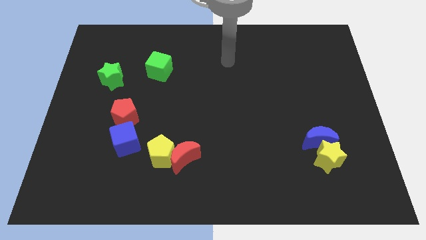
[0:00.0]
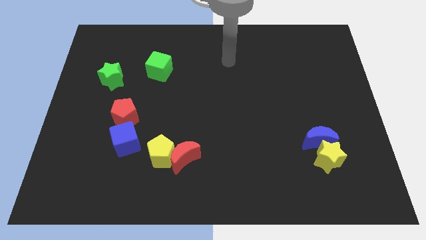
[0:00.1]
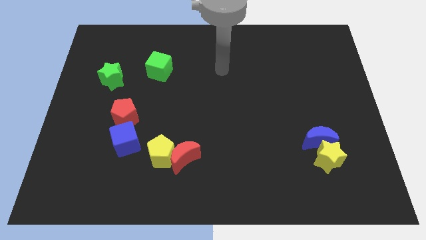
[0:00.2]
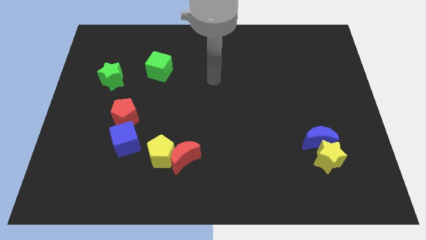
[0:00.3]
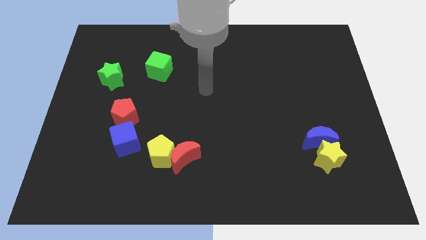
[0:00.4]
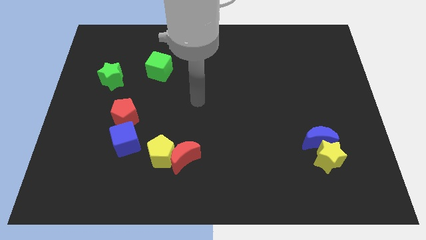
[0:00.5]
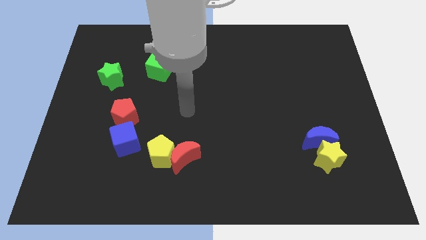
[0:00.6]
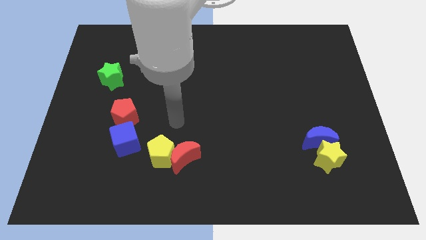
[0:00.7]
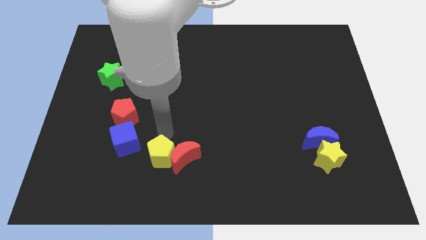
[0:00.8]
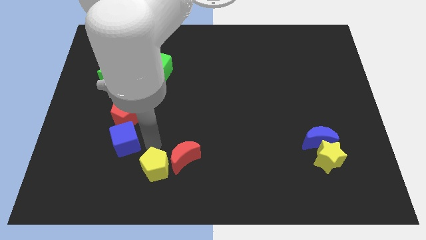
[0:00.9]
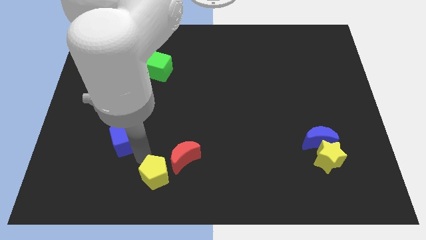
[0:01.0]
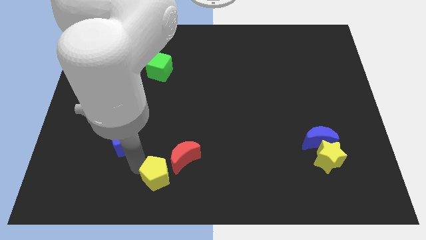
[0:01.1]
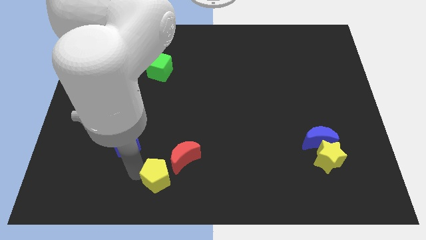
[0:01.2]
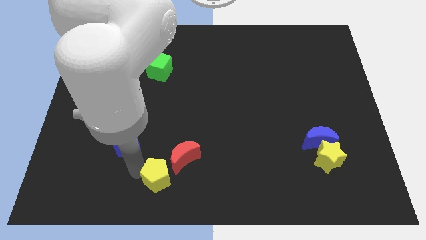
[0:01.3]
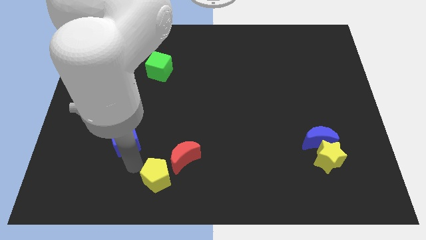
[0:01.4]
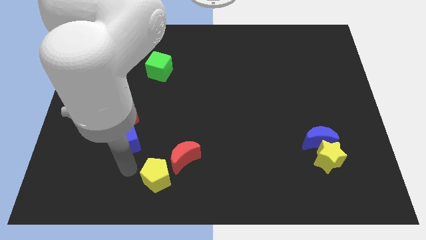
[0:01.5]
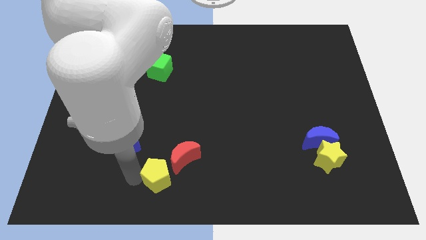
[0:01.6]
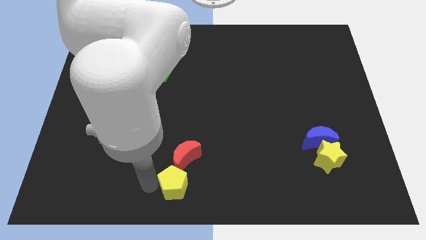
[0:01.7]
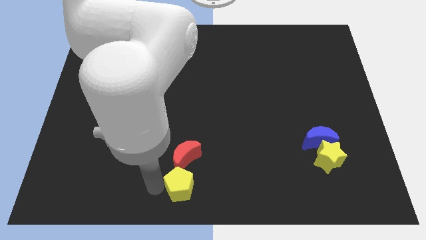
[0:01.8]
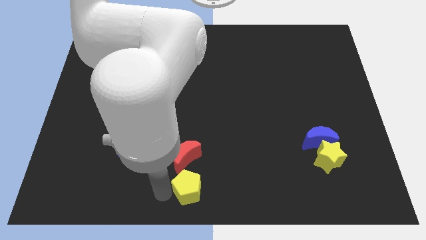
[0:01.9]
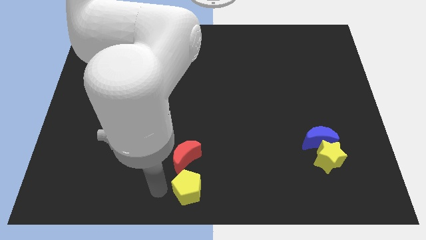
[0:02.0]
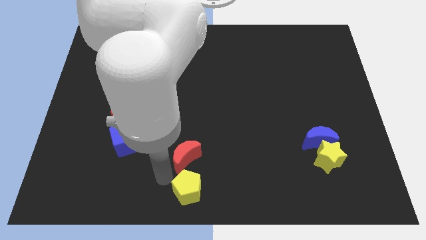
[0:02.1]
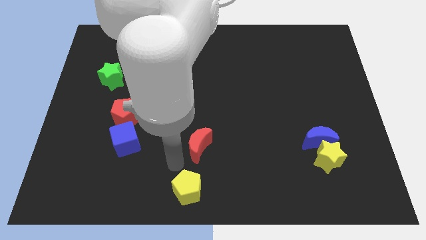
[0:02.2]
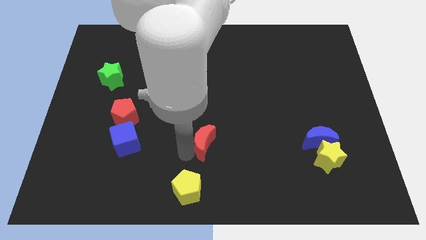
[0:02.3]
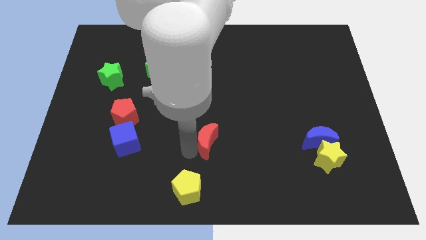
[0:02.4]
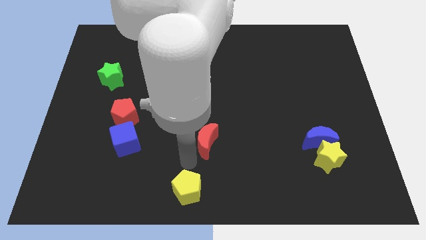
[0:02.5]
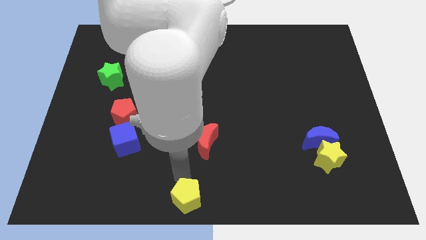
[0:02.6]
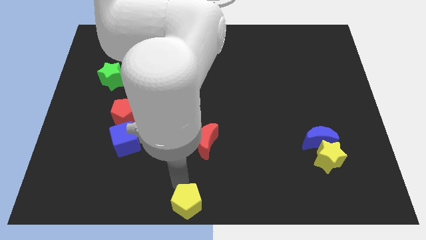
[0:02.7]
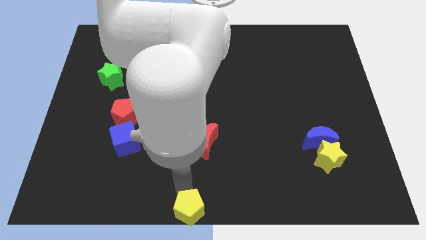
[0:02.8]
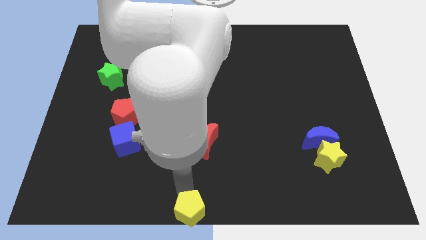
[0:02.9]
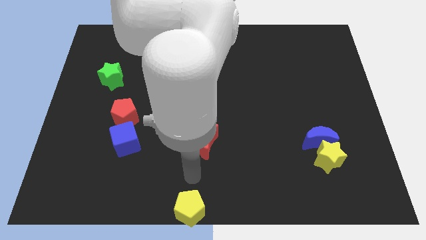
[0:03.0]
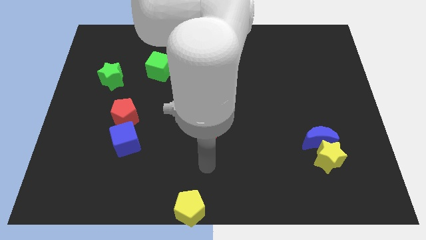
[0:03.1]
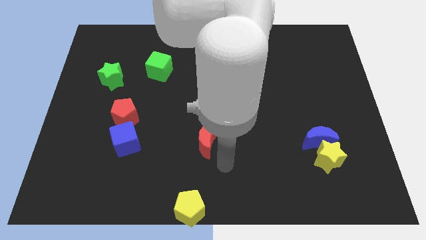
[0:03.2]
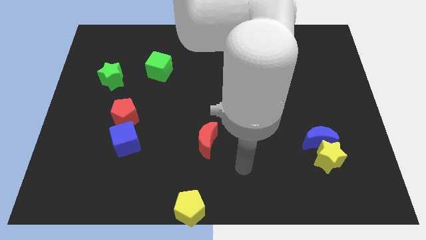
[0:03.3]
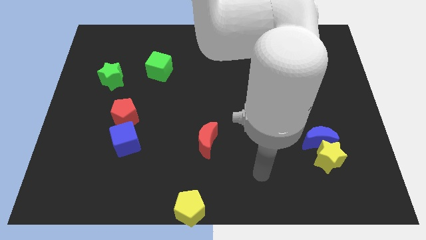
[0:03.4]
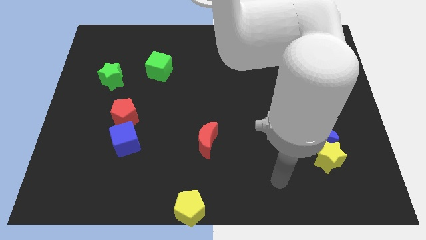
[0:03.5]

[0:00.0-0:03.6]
place the yellow pentagon at the bottom center of the board

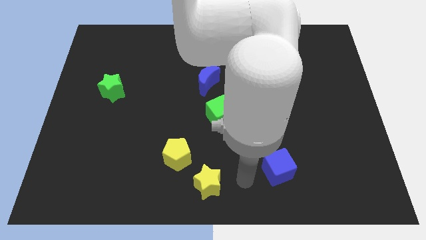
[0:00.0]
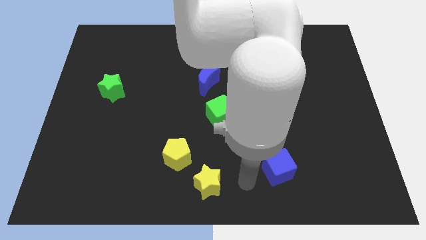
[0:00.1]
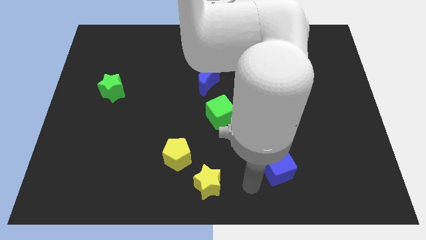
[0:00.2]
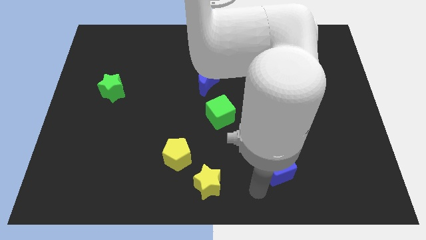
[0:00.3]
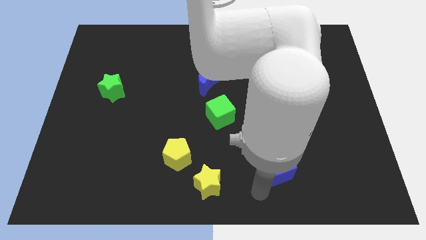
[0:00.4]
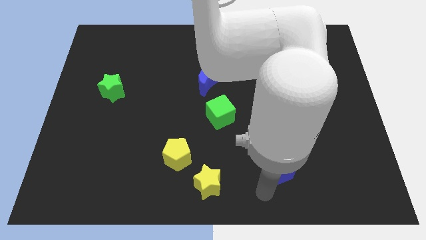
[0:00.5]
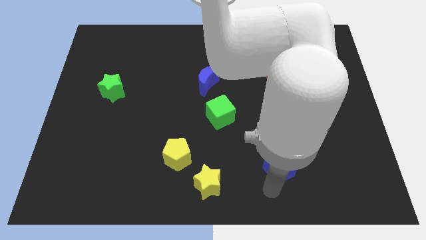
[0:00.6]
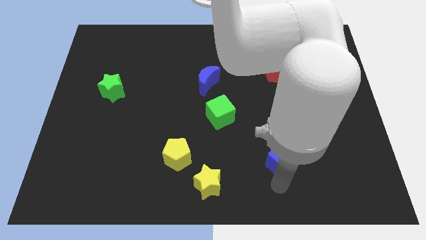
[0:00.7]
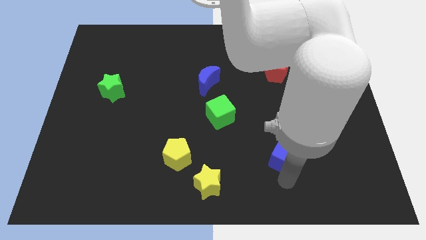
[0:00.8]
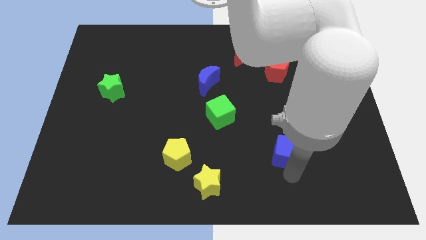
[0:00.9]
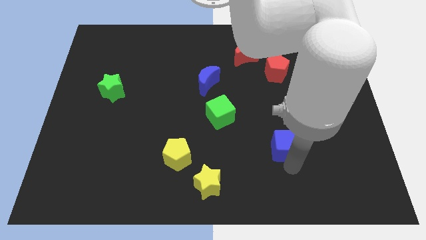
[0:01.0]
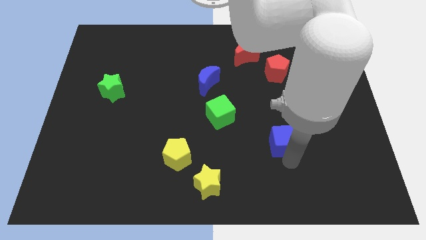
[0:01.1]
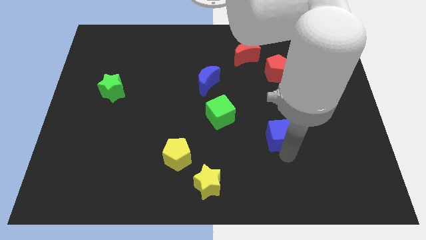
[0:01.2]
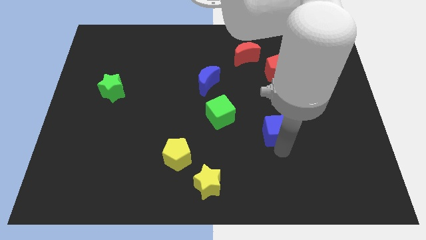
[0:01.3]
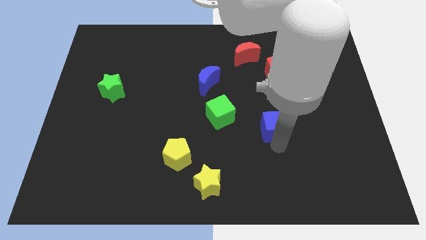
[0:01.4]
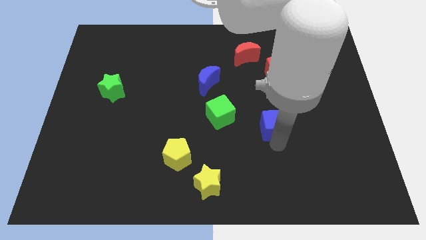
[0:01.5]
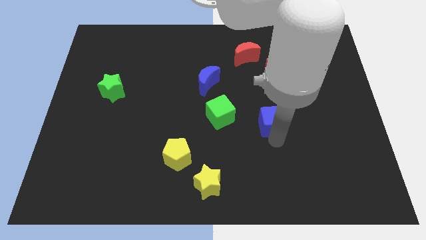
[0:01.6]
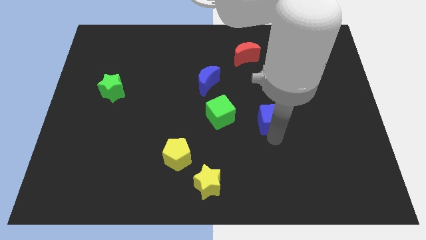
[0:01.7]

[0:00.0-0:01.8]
place the blue cube to the right of the green cube

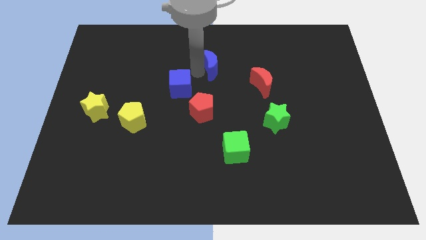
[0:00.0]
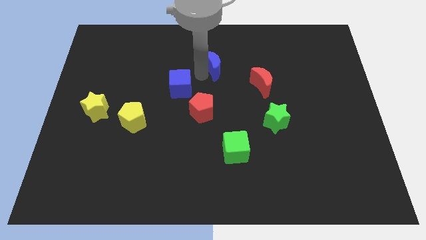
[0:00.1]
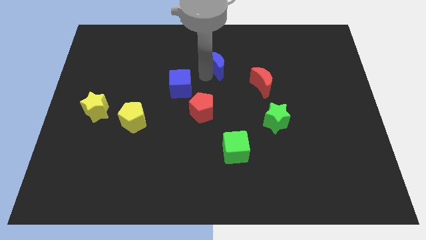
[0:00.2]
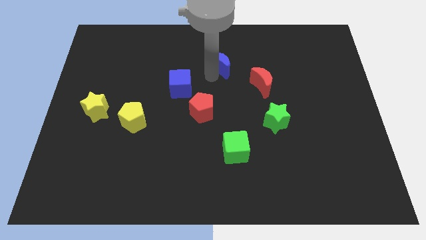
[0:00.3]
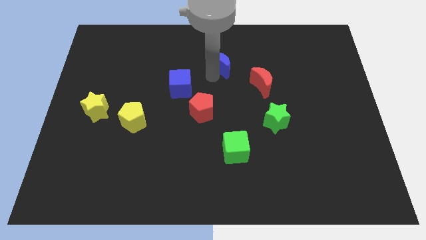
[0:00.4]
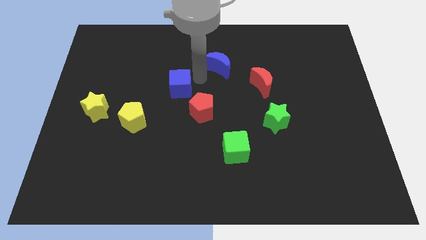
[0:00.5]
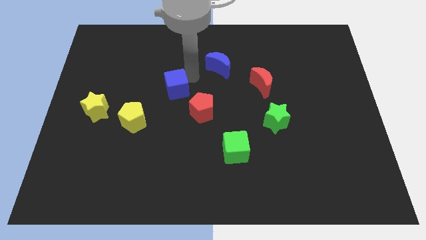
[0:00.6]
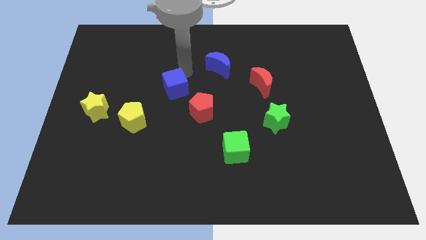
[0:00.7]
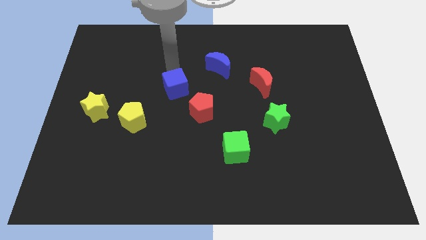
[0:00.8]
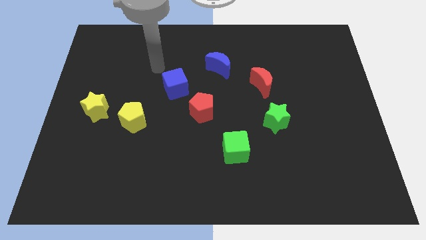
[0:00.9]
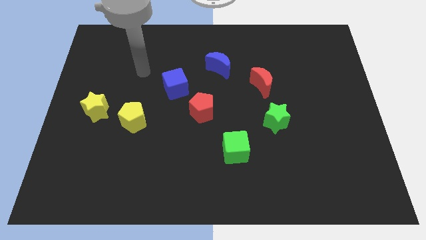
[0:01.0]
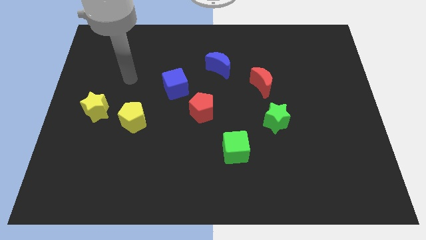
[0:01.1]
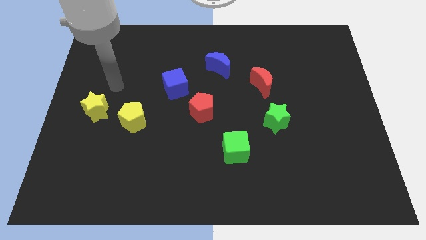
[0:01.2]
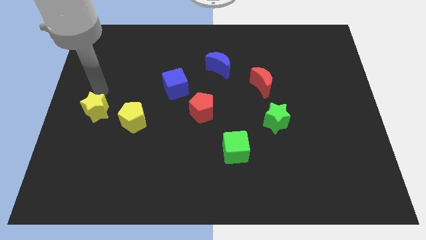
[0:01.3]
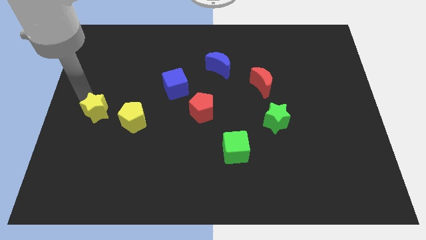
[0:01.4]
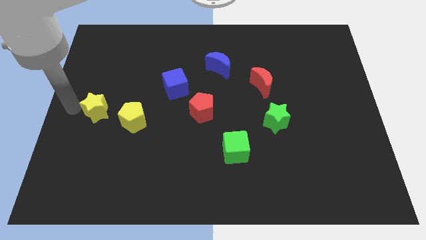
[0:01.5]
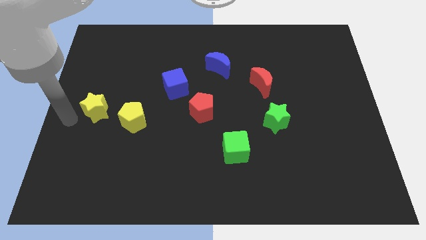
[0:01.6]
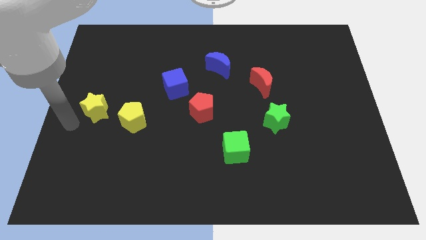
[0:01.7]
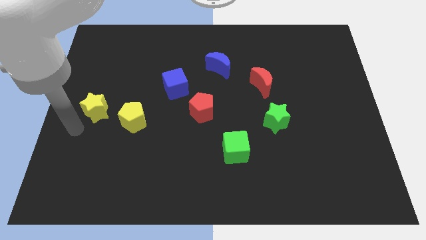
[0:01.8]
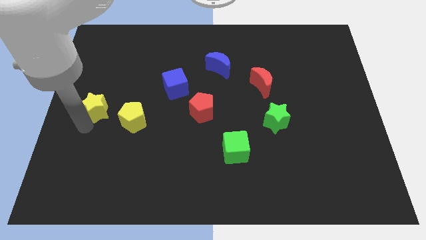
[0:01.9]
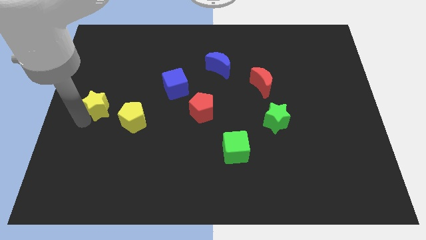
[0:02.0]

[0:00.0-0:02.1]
slide move the blue cube towards left

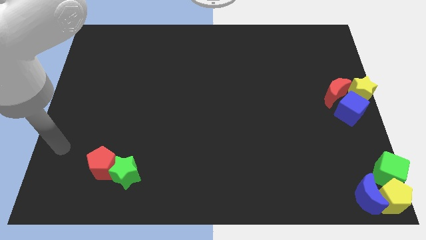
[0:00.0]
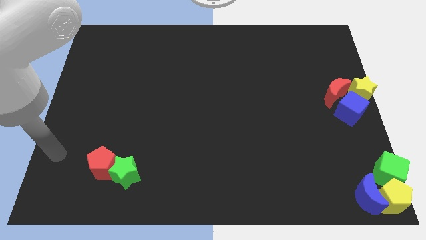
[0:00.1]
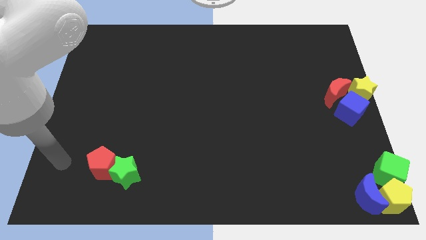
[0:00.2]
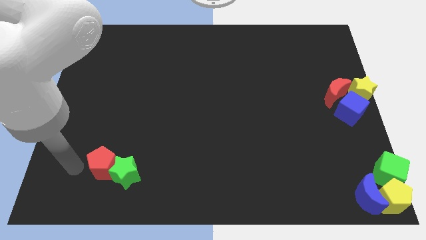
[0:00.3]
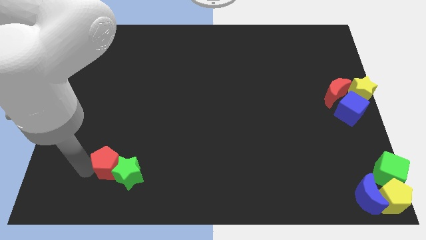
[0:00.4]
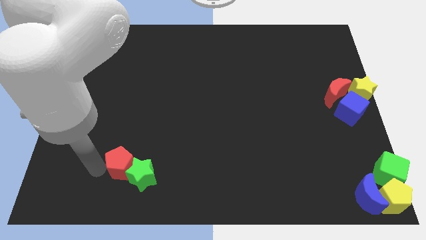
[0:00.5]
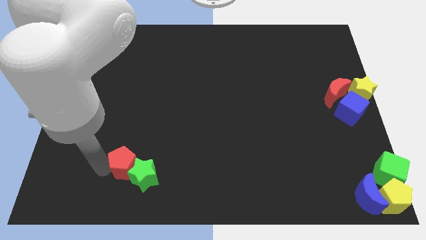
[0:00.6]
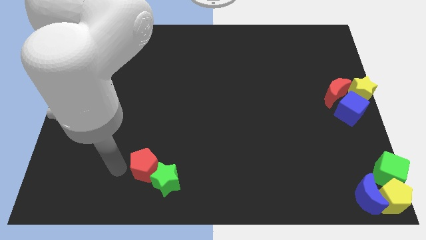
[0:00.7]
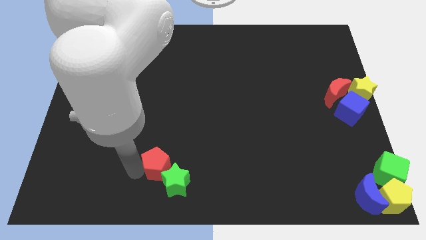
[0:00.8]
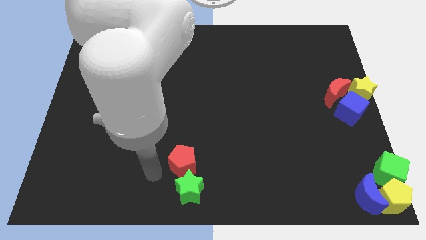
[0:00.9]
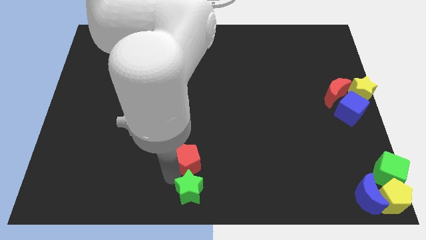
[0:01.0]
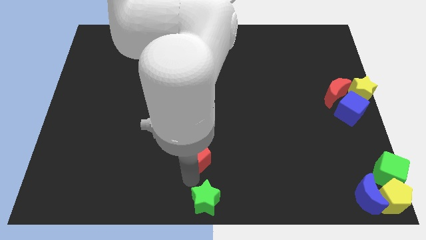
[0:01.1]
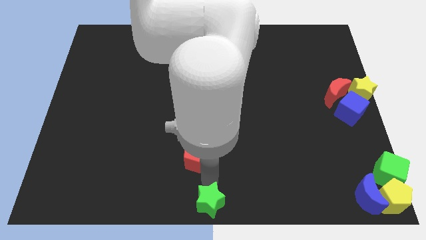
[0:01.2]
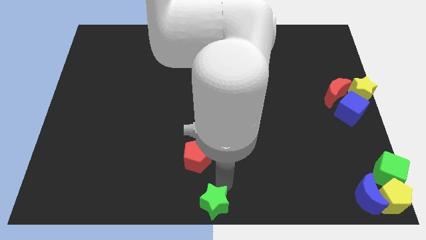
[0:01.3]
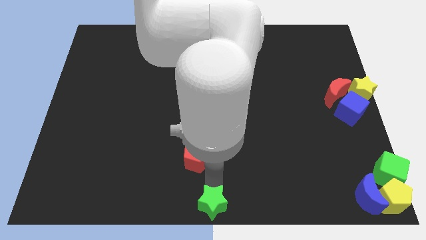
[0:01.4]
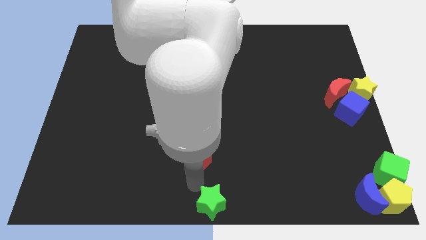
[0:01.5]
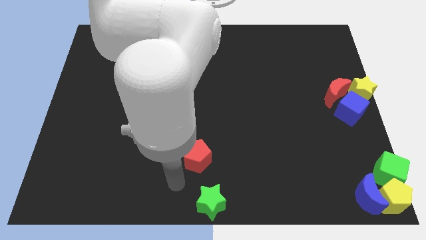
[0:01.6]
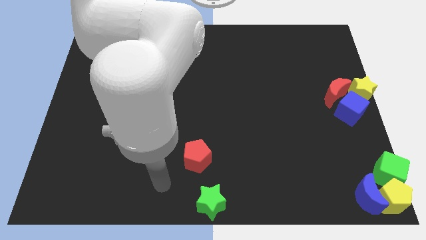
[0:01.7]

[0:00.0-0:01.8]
move the green star to the bottom center of the board
